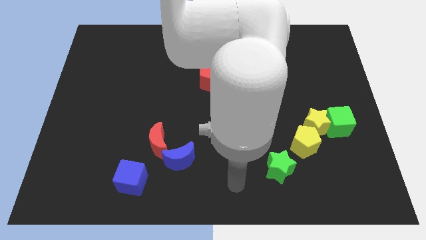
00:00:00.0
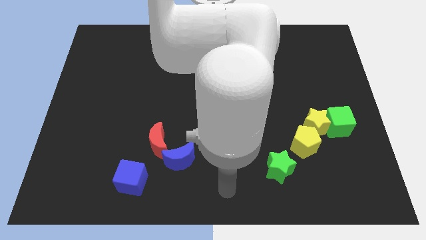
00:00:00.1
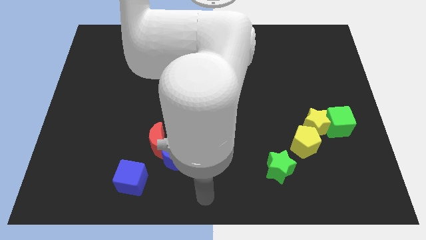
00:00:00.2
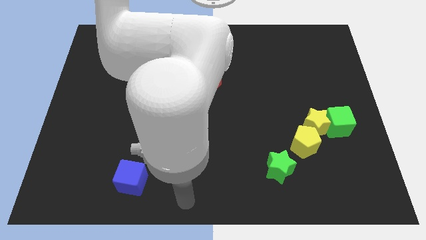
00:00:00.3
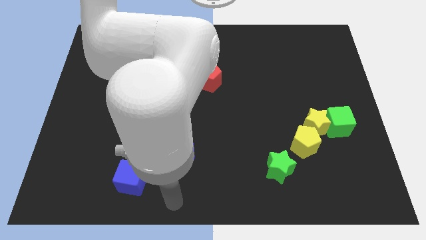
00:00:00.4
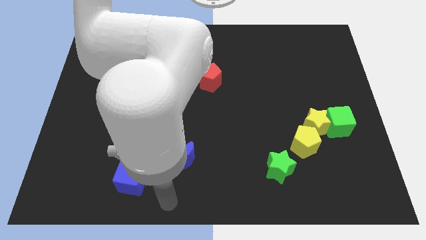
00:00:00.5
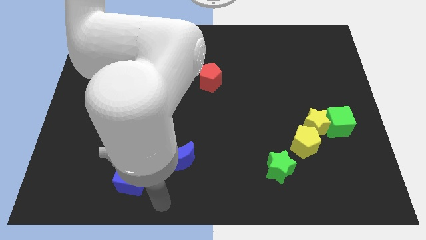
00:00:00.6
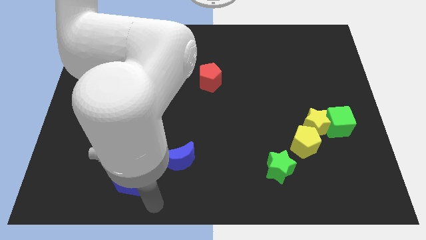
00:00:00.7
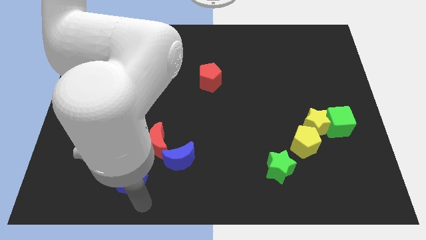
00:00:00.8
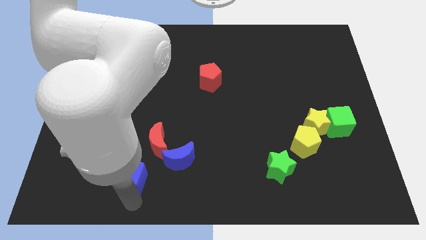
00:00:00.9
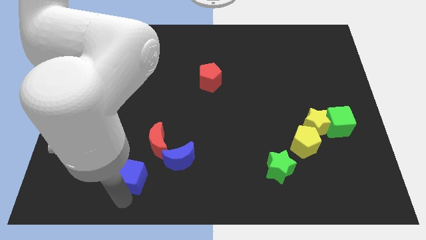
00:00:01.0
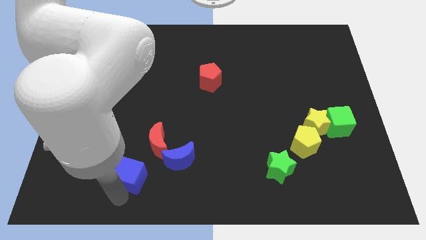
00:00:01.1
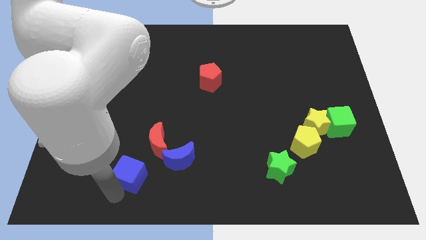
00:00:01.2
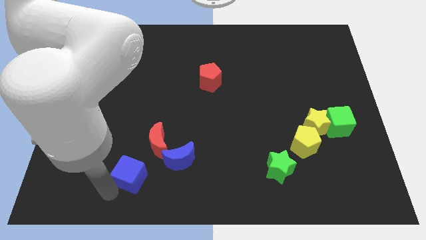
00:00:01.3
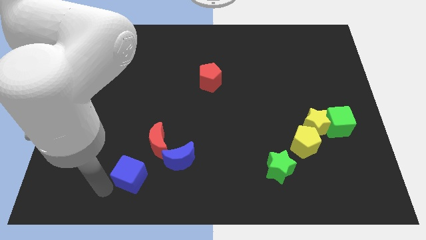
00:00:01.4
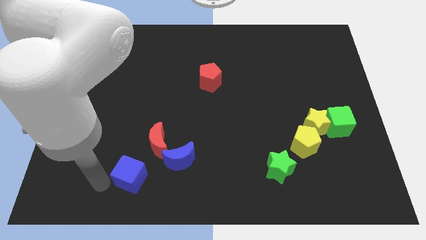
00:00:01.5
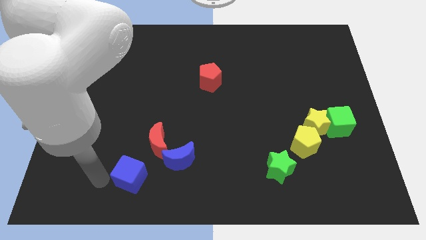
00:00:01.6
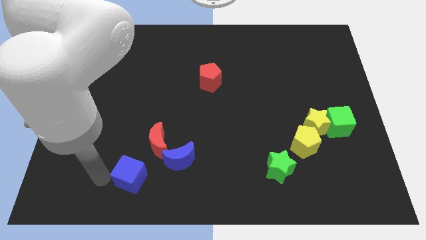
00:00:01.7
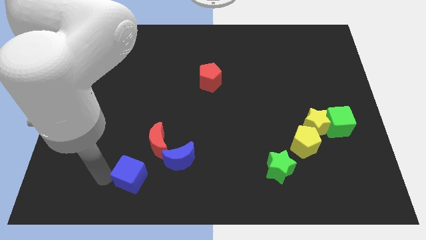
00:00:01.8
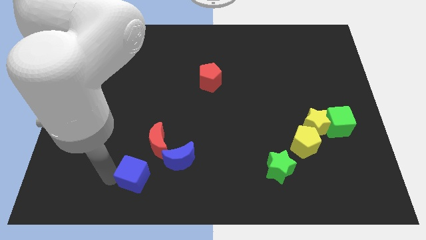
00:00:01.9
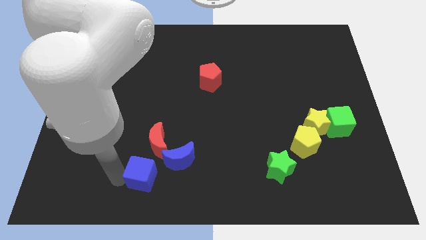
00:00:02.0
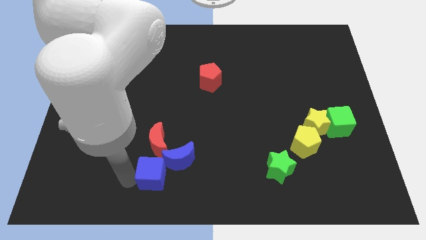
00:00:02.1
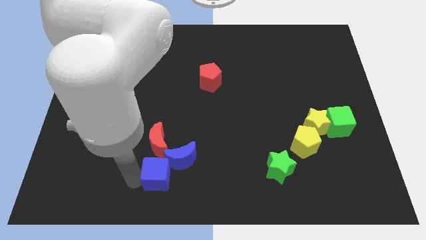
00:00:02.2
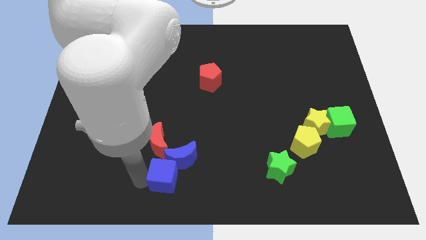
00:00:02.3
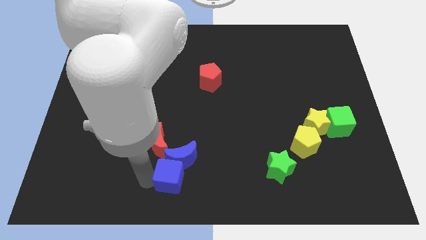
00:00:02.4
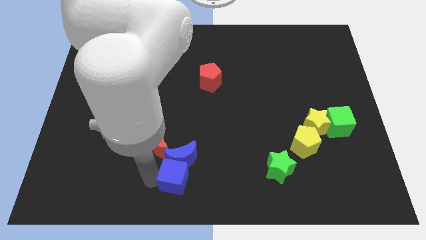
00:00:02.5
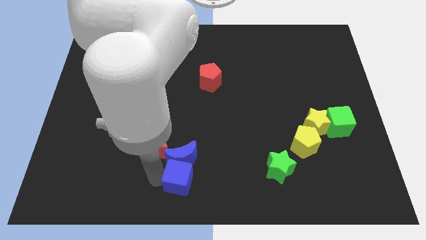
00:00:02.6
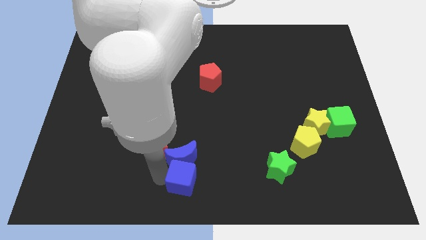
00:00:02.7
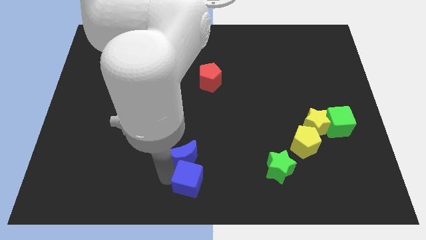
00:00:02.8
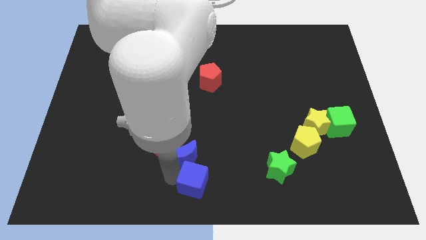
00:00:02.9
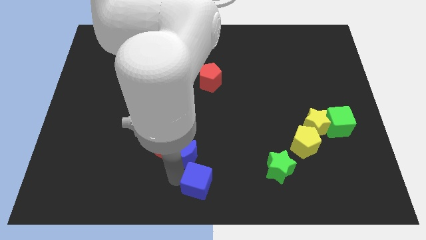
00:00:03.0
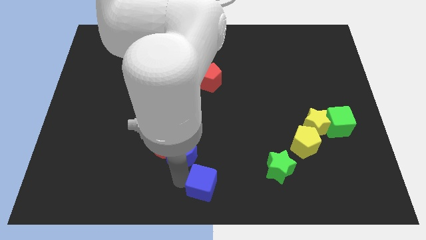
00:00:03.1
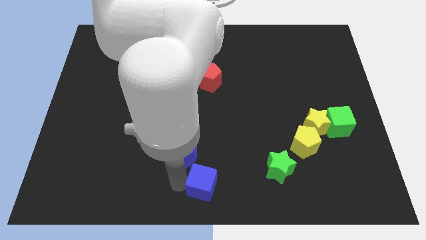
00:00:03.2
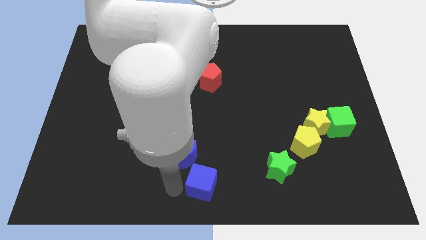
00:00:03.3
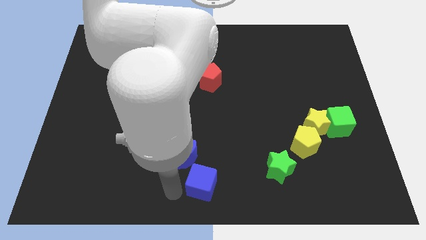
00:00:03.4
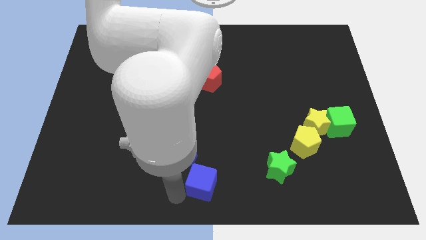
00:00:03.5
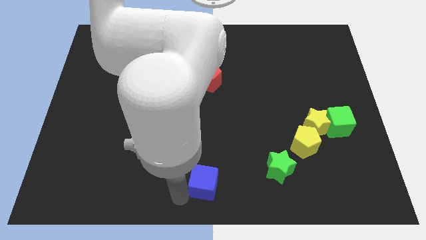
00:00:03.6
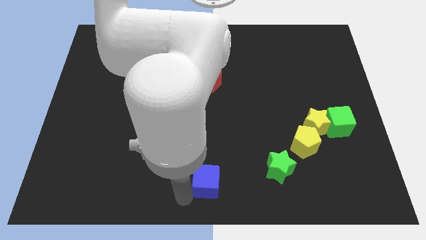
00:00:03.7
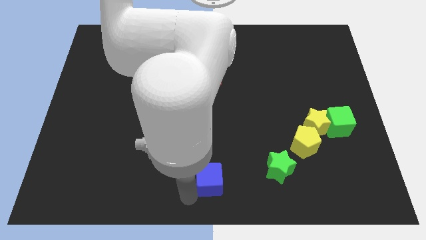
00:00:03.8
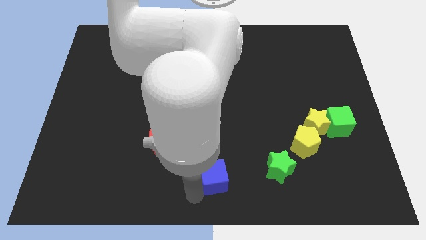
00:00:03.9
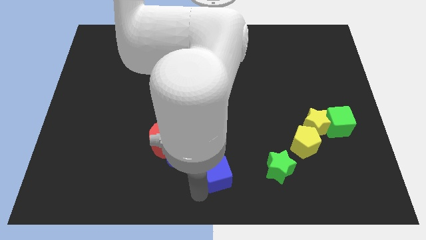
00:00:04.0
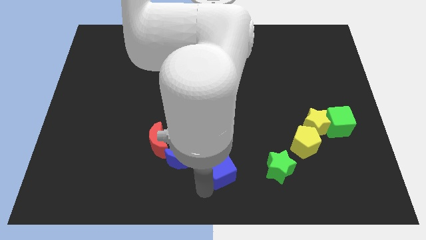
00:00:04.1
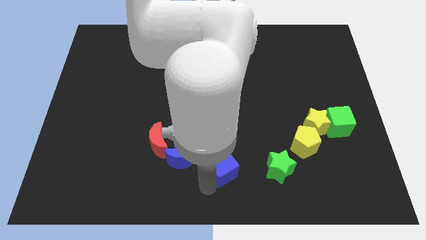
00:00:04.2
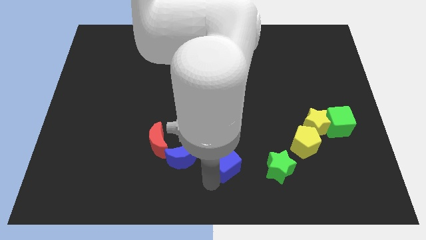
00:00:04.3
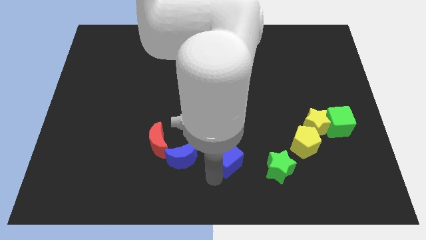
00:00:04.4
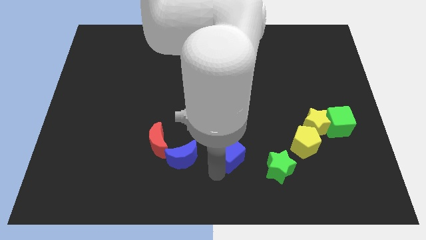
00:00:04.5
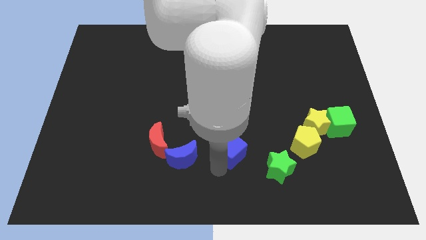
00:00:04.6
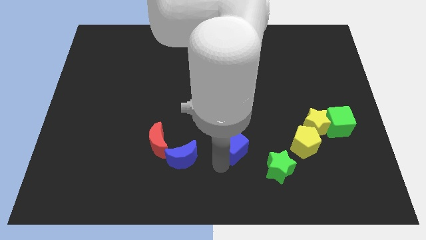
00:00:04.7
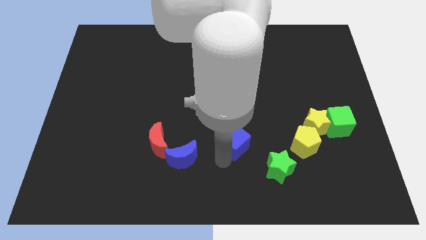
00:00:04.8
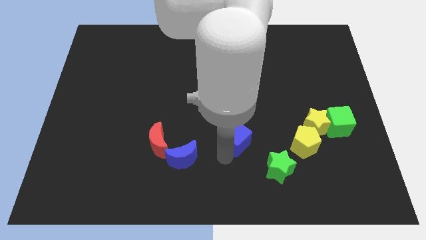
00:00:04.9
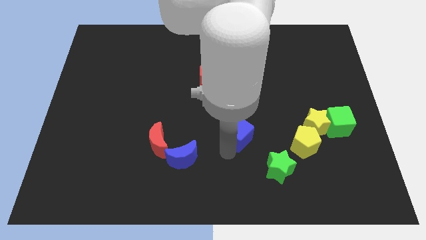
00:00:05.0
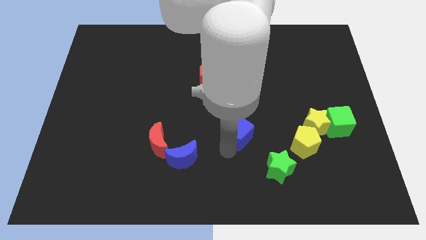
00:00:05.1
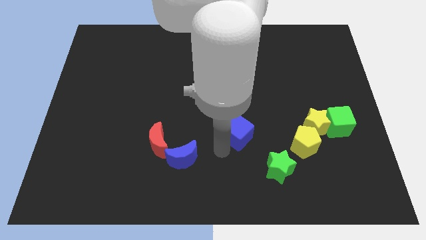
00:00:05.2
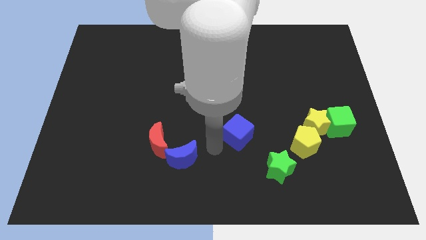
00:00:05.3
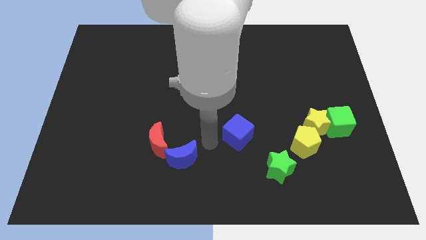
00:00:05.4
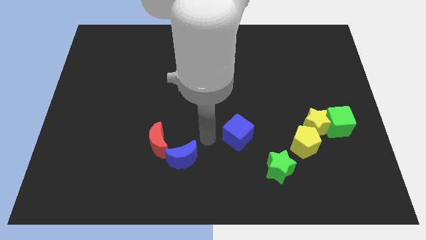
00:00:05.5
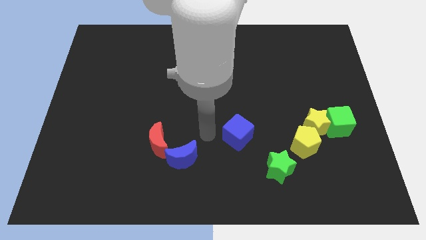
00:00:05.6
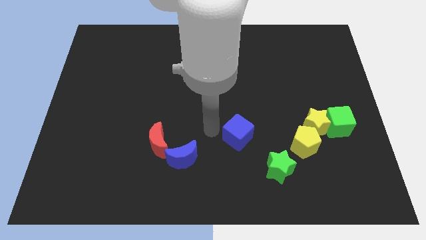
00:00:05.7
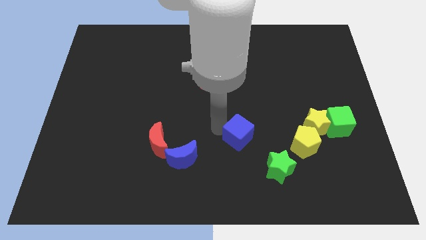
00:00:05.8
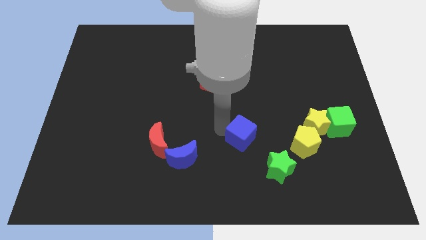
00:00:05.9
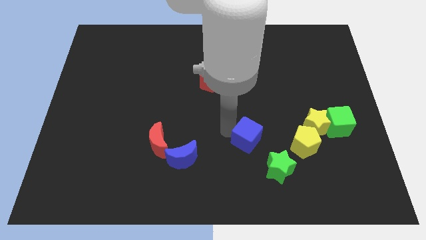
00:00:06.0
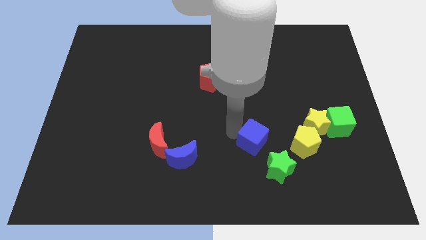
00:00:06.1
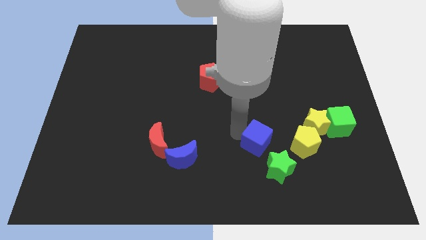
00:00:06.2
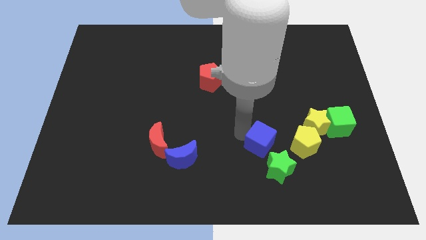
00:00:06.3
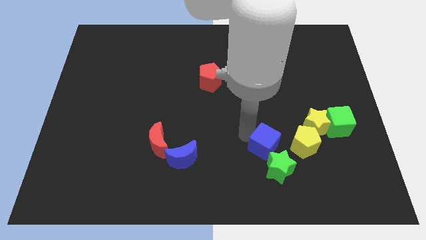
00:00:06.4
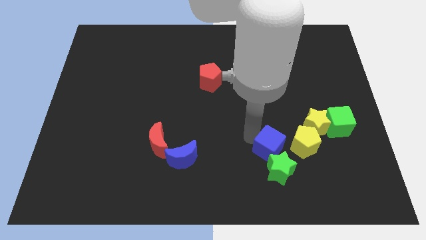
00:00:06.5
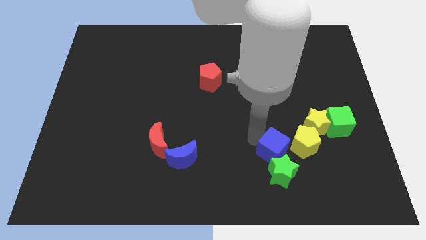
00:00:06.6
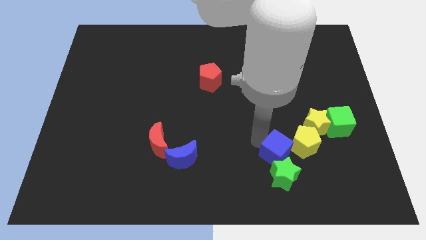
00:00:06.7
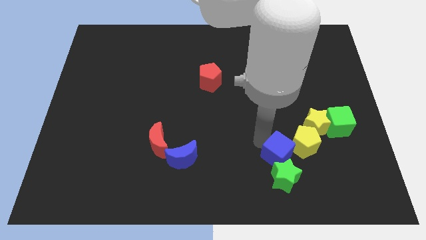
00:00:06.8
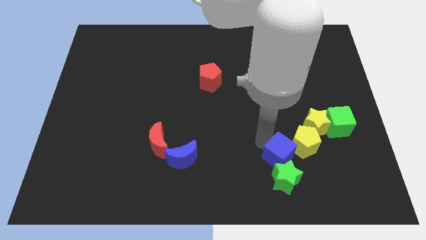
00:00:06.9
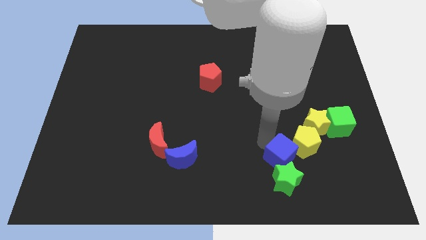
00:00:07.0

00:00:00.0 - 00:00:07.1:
move the blue cube close to the yellow pentagon

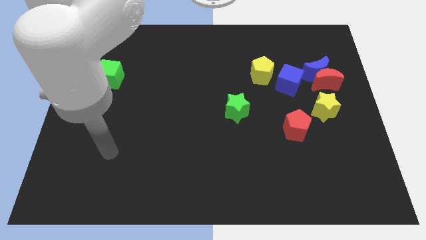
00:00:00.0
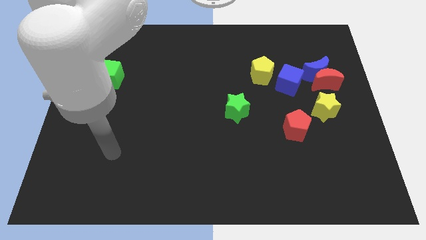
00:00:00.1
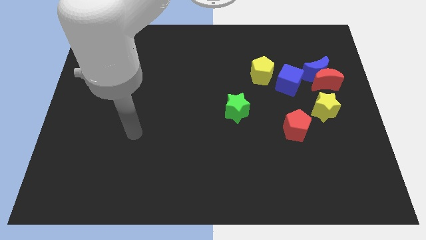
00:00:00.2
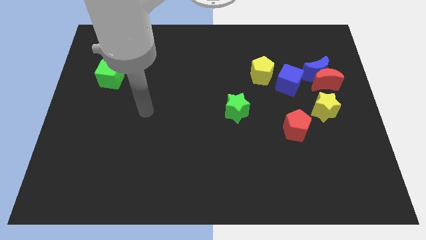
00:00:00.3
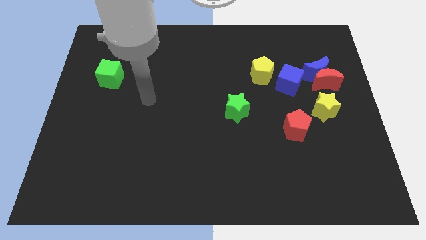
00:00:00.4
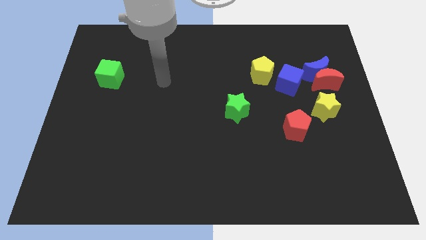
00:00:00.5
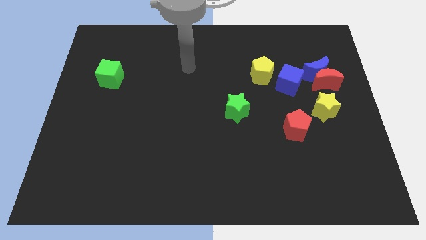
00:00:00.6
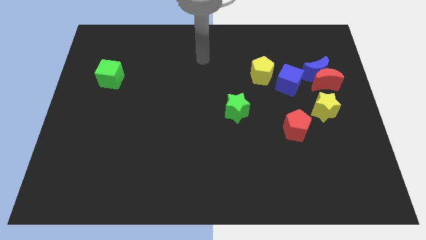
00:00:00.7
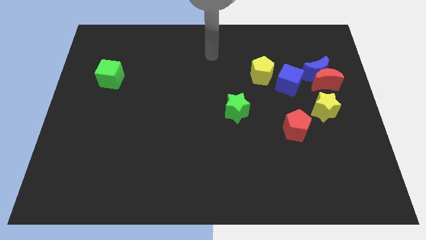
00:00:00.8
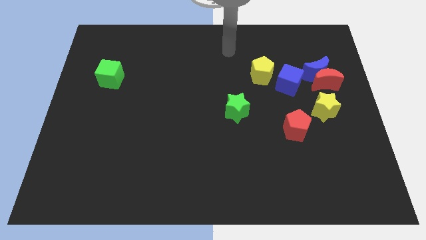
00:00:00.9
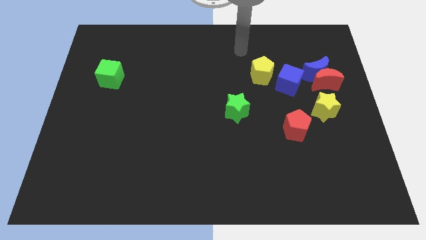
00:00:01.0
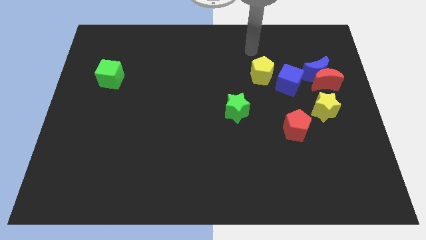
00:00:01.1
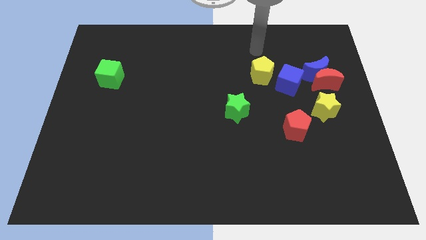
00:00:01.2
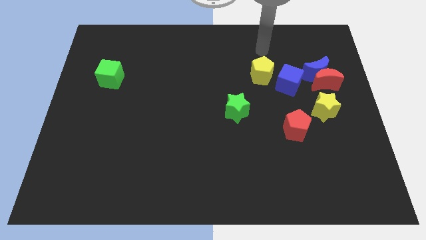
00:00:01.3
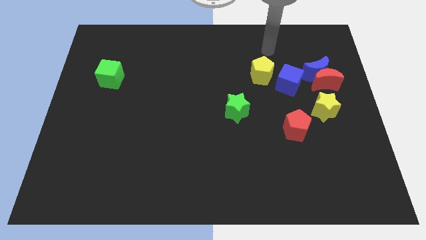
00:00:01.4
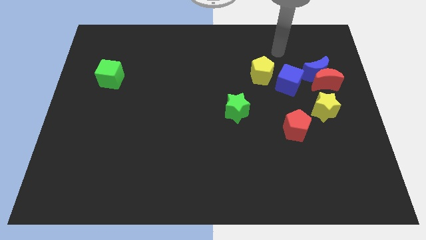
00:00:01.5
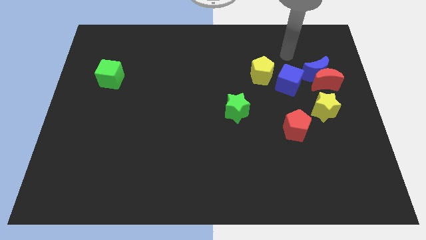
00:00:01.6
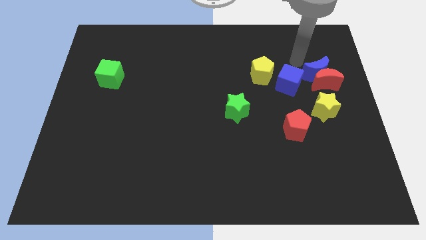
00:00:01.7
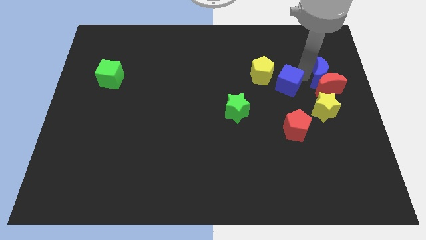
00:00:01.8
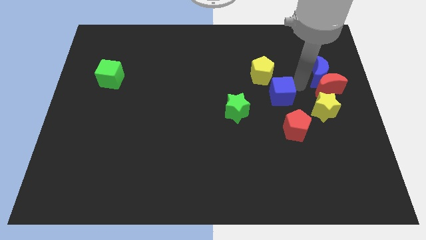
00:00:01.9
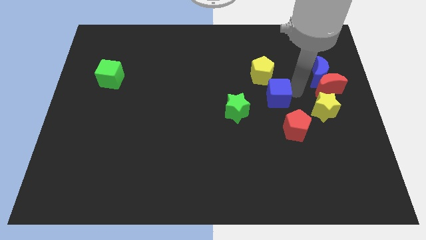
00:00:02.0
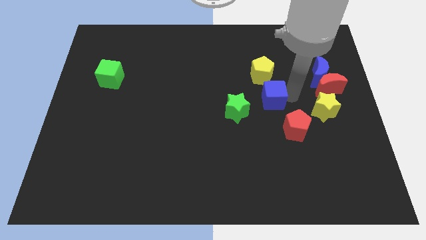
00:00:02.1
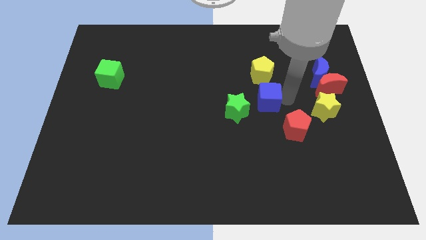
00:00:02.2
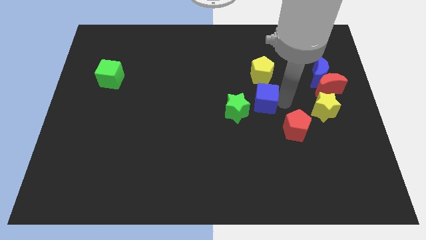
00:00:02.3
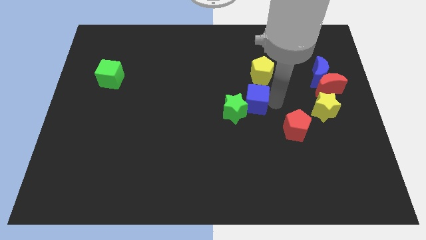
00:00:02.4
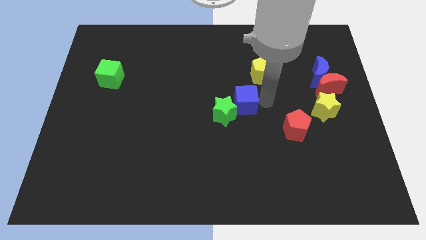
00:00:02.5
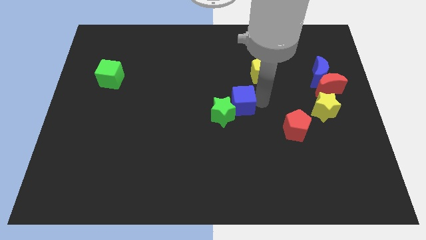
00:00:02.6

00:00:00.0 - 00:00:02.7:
slide the blue cube to the green star
